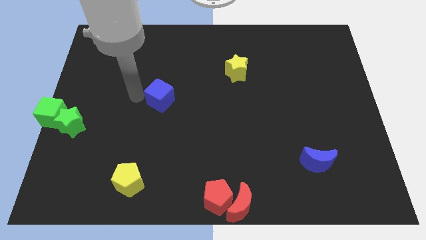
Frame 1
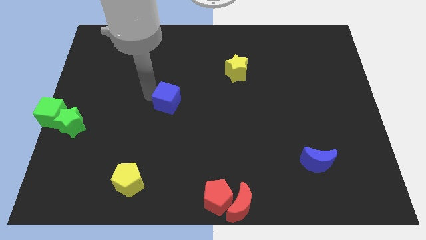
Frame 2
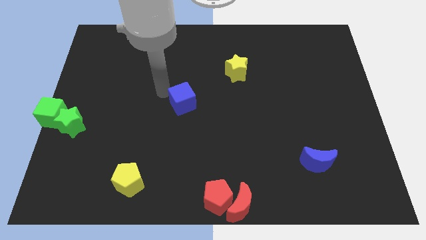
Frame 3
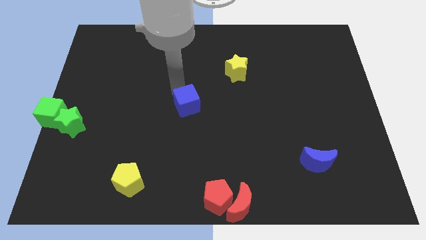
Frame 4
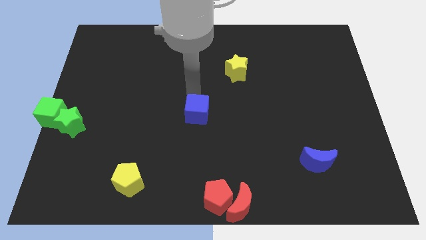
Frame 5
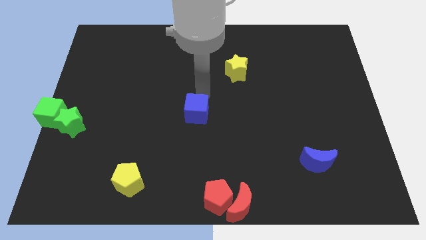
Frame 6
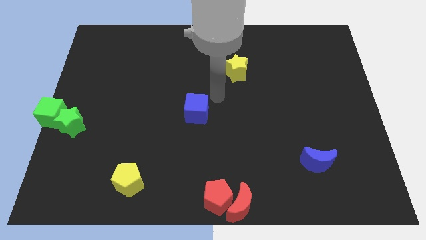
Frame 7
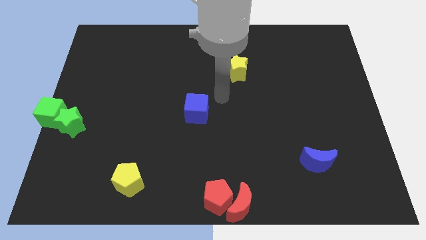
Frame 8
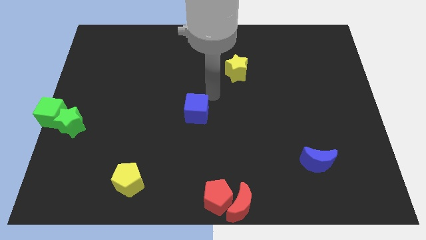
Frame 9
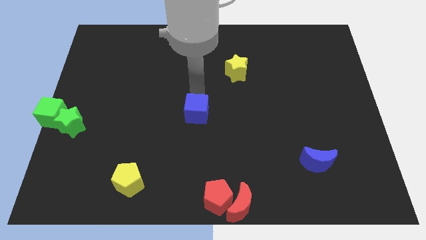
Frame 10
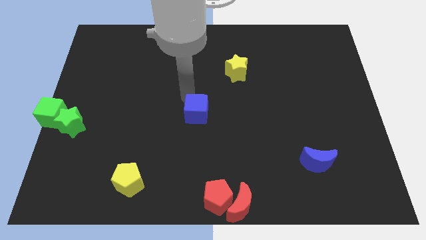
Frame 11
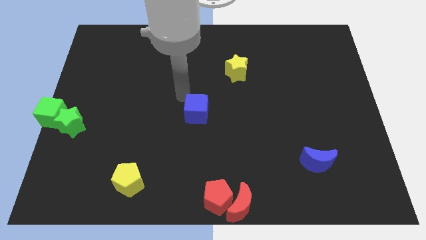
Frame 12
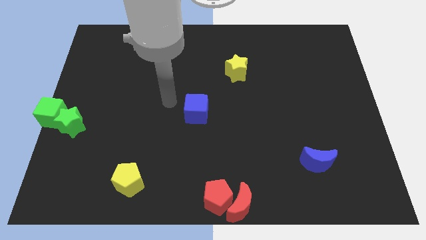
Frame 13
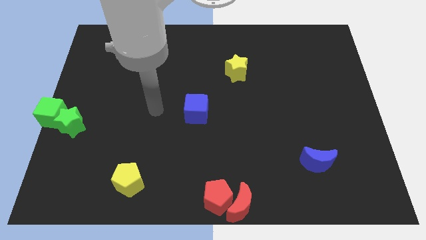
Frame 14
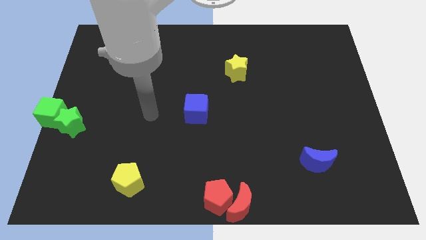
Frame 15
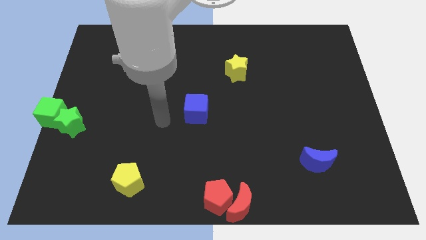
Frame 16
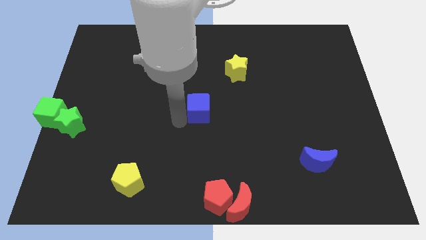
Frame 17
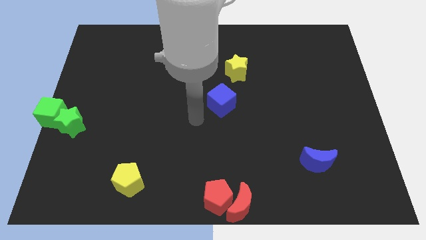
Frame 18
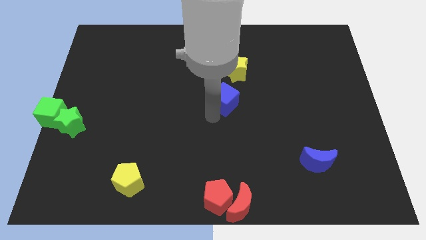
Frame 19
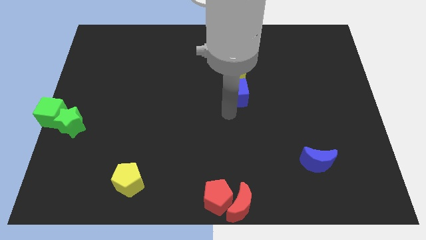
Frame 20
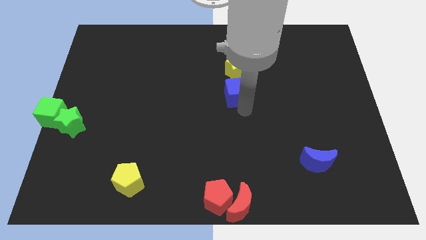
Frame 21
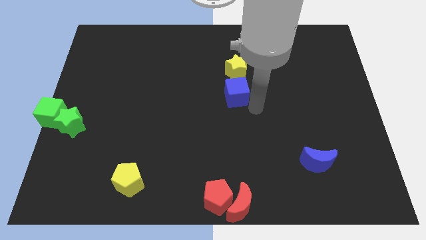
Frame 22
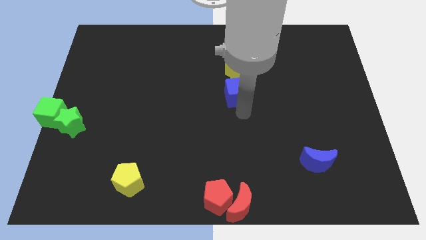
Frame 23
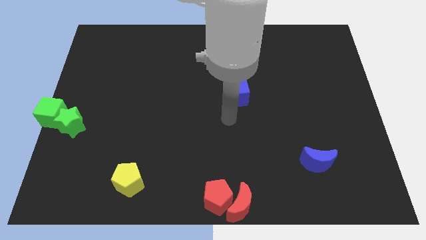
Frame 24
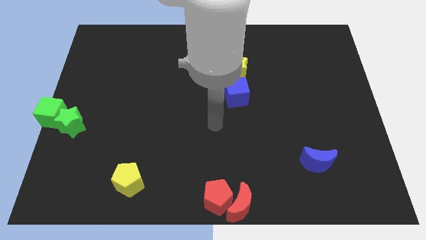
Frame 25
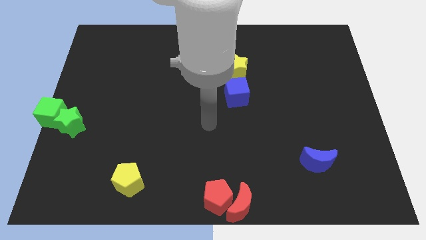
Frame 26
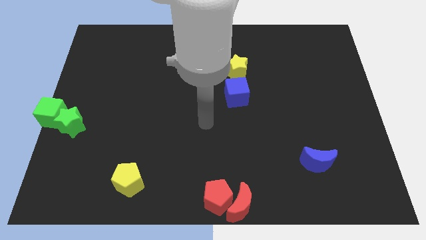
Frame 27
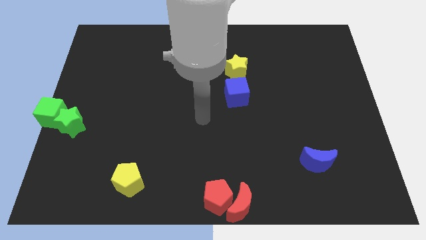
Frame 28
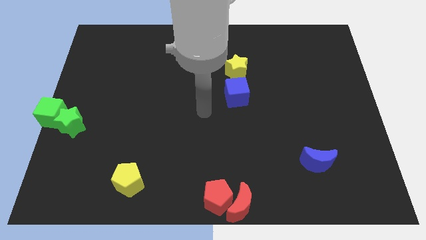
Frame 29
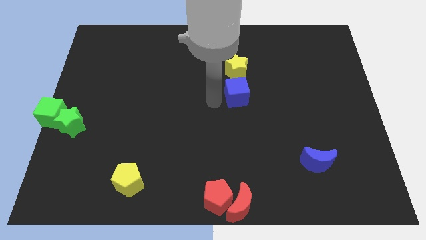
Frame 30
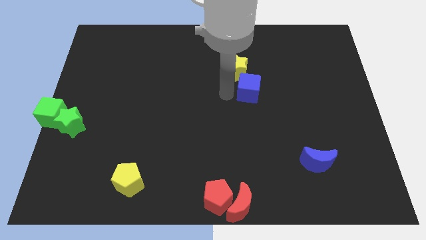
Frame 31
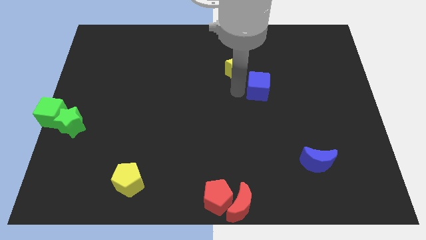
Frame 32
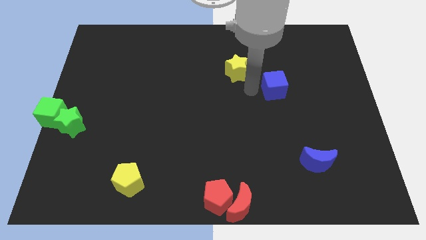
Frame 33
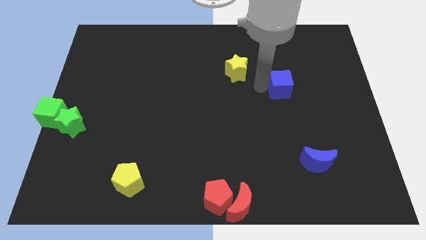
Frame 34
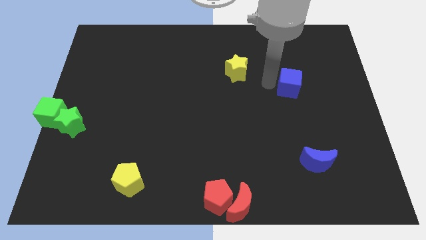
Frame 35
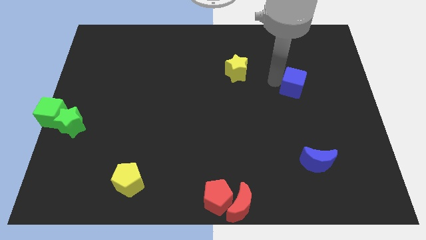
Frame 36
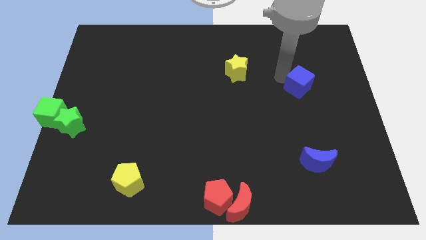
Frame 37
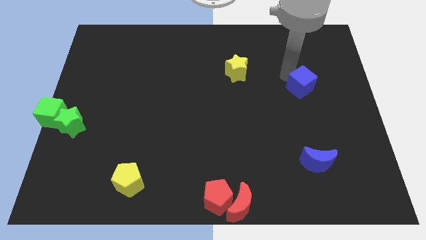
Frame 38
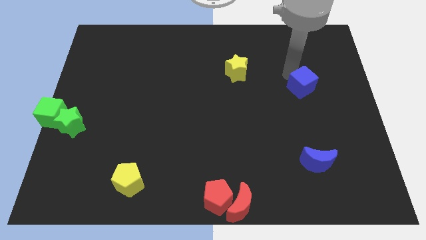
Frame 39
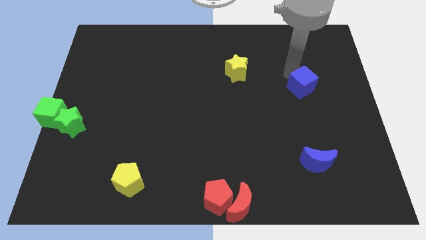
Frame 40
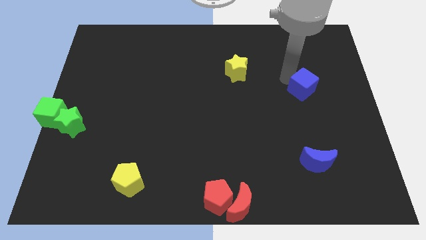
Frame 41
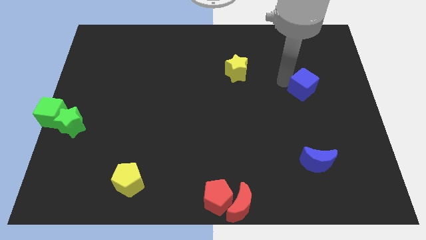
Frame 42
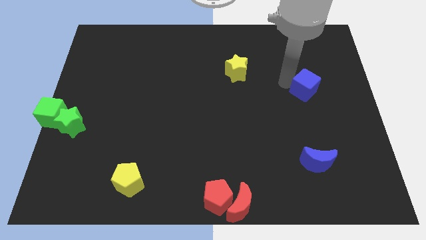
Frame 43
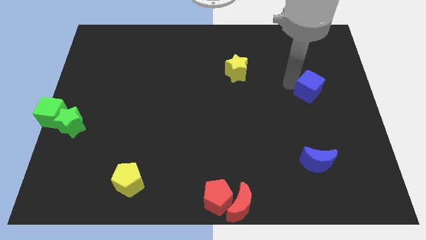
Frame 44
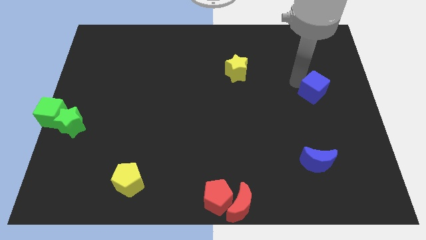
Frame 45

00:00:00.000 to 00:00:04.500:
place the blue cube above the blue moon

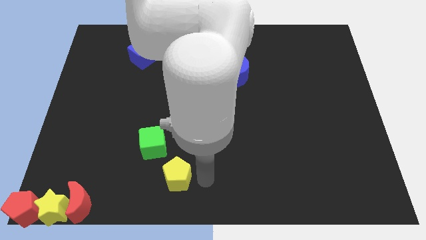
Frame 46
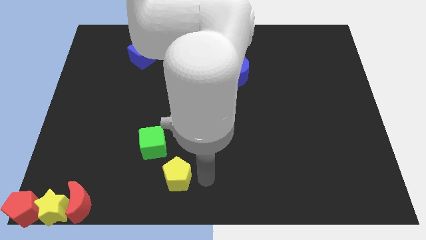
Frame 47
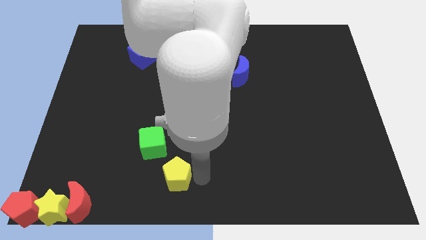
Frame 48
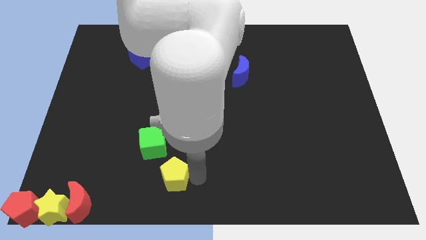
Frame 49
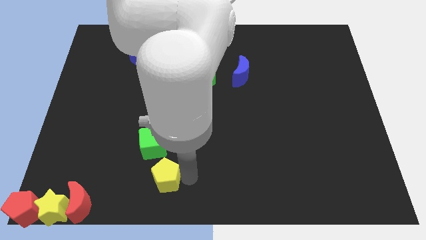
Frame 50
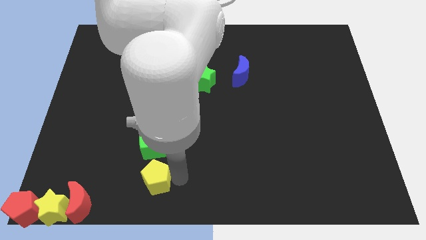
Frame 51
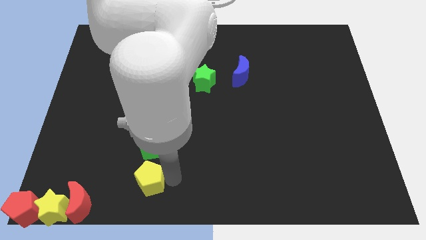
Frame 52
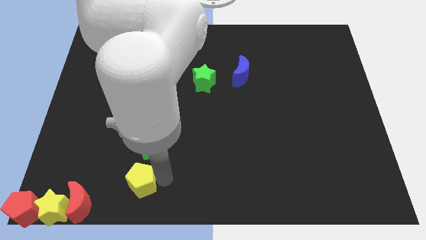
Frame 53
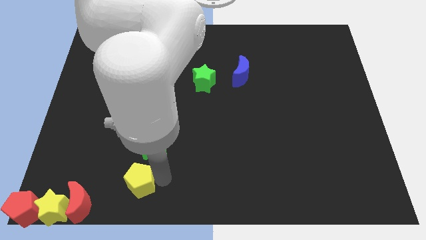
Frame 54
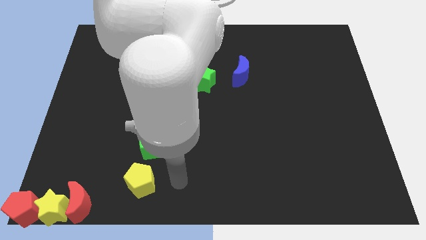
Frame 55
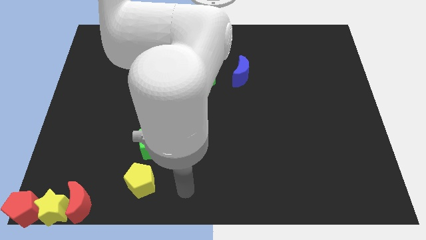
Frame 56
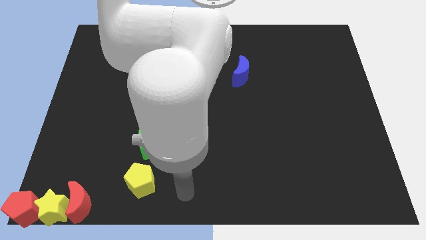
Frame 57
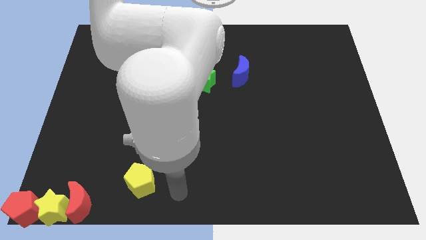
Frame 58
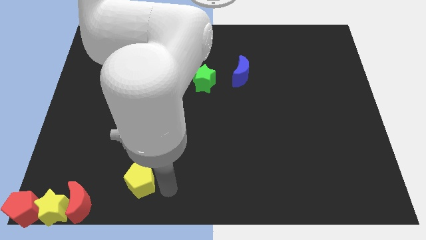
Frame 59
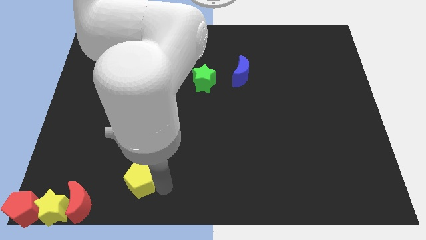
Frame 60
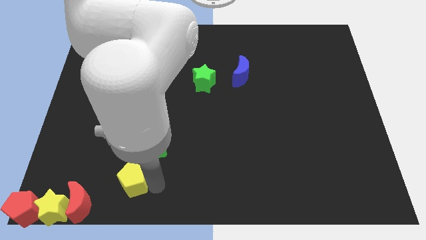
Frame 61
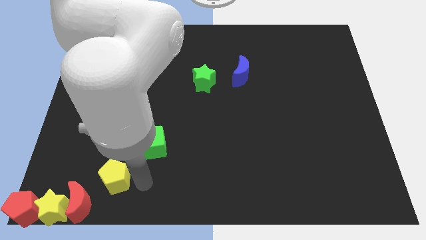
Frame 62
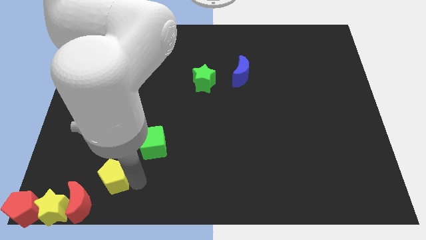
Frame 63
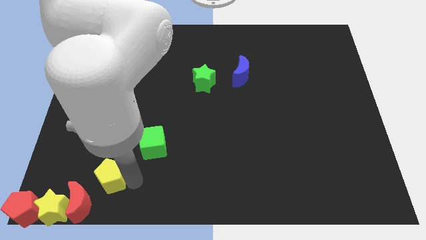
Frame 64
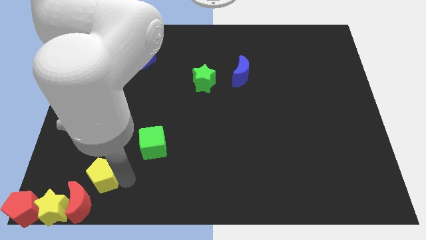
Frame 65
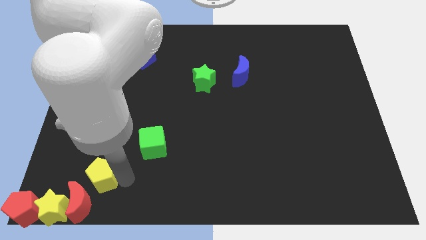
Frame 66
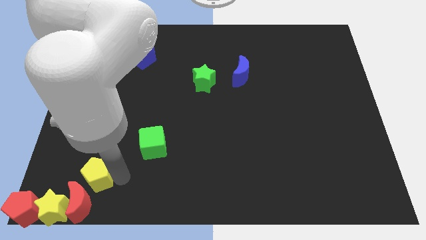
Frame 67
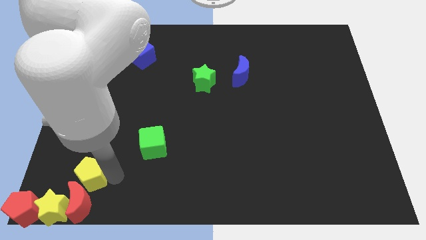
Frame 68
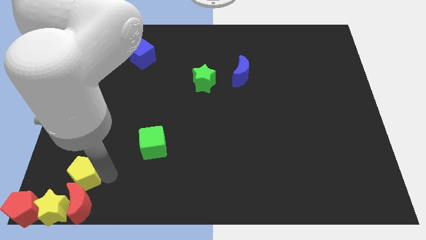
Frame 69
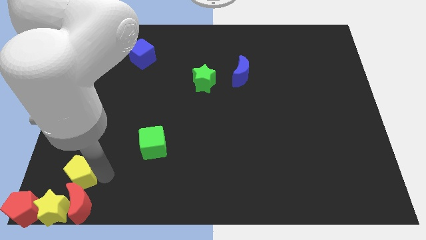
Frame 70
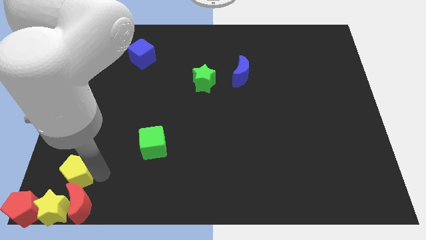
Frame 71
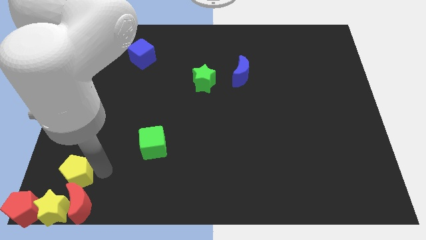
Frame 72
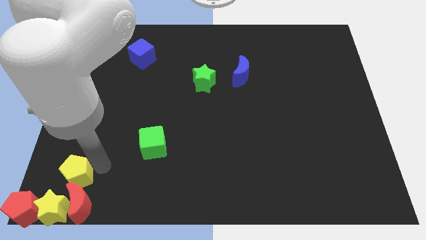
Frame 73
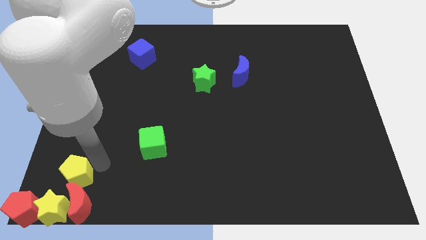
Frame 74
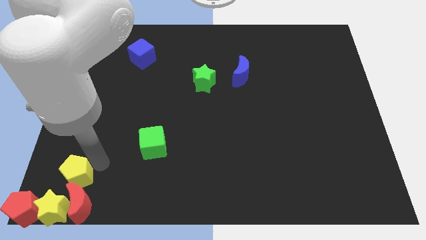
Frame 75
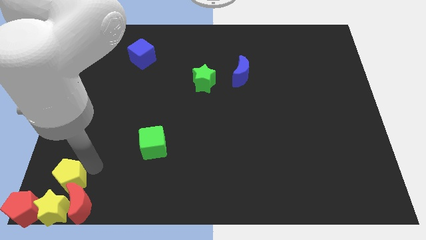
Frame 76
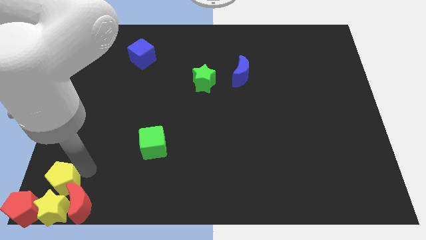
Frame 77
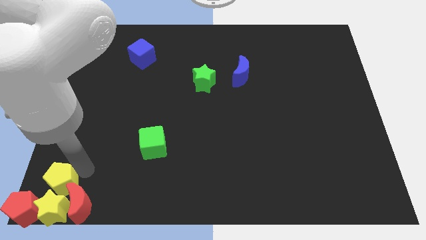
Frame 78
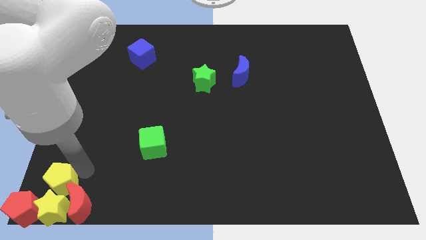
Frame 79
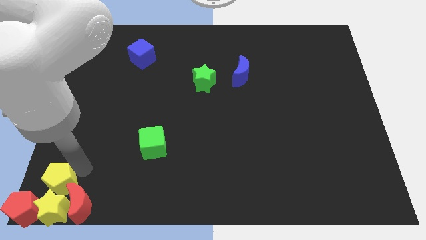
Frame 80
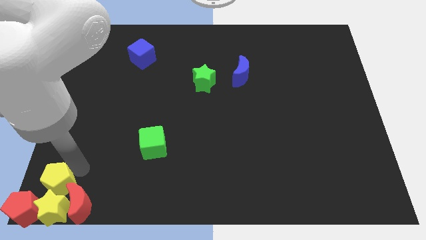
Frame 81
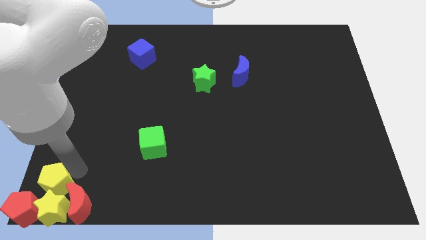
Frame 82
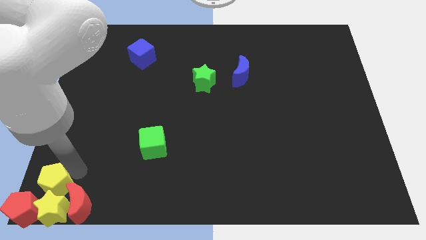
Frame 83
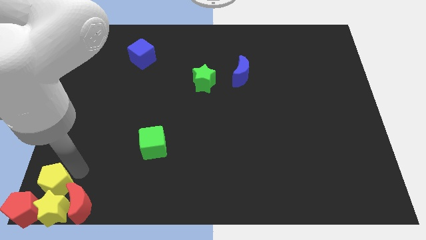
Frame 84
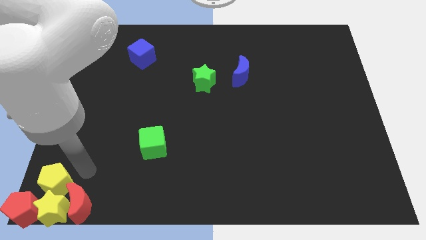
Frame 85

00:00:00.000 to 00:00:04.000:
push the yellow pentagon at the top of the yellow star

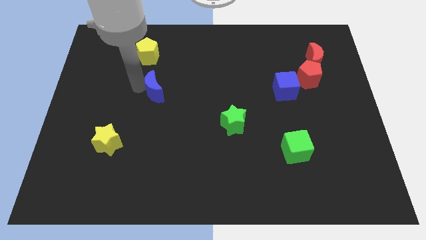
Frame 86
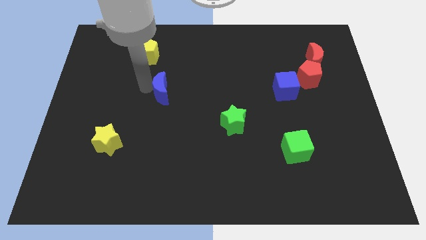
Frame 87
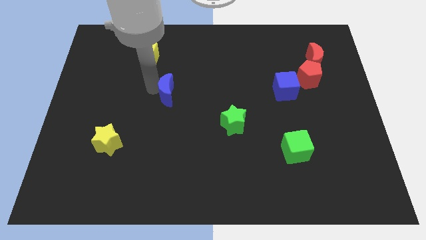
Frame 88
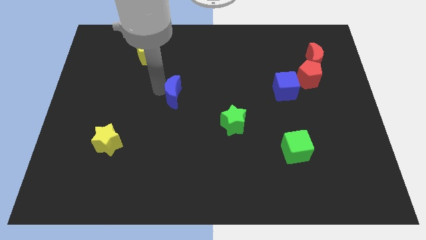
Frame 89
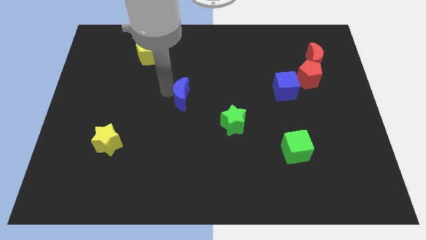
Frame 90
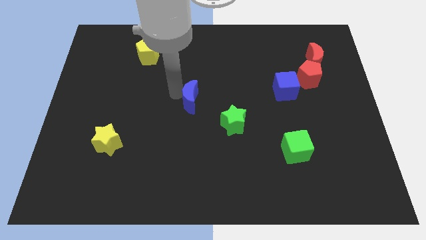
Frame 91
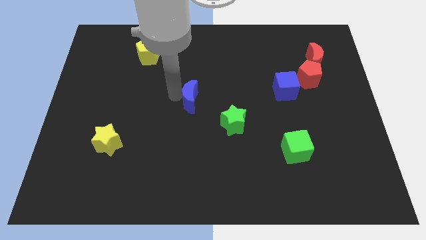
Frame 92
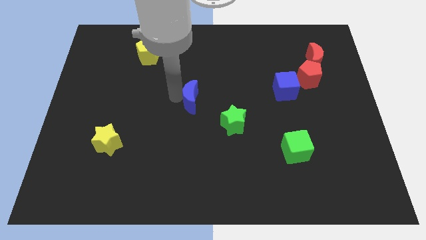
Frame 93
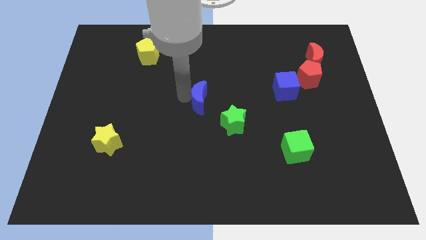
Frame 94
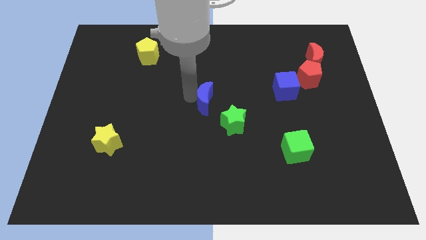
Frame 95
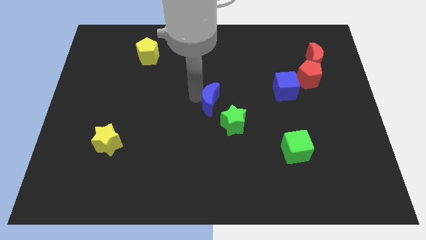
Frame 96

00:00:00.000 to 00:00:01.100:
push the blue crescent to the center of the board
